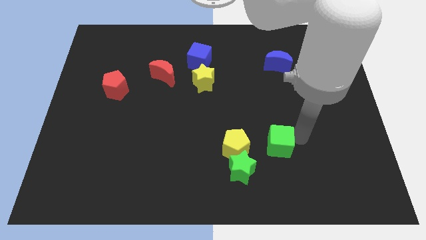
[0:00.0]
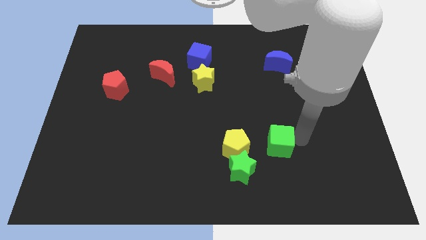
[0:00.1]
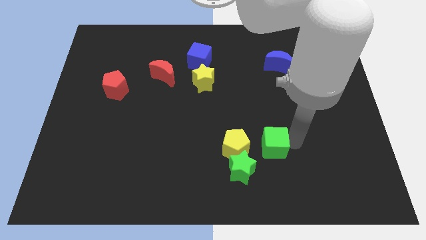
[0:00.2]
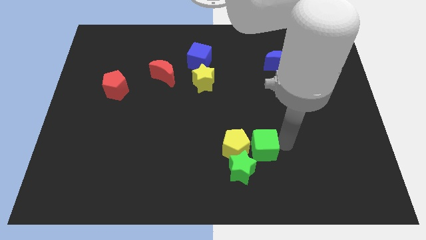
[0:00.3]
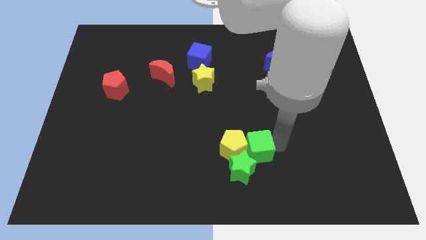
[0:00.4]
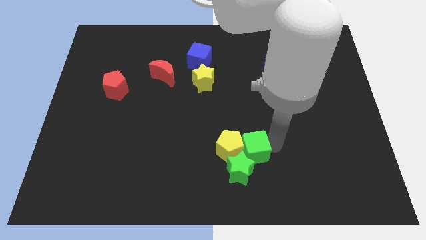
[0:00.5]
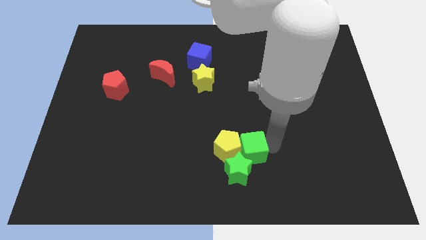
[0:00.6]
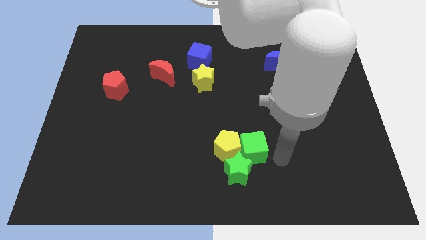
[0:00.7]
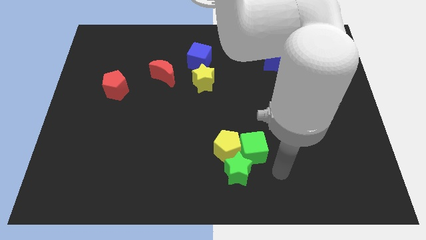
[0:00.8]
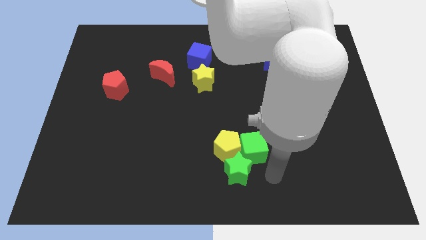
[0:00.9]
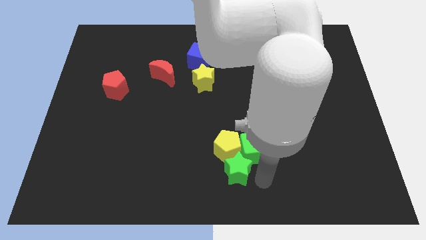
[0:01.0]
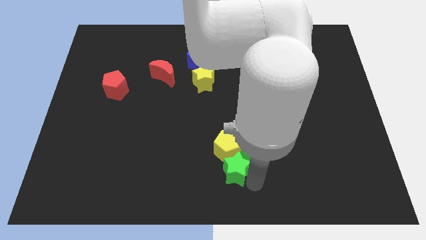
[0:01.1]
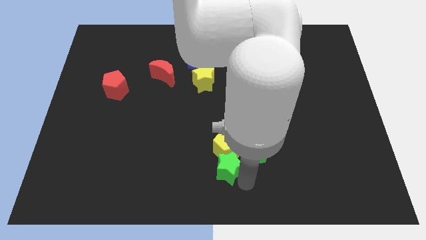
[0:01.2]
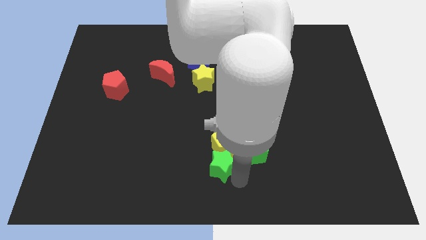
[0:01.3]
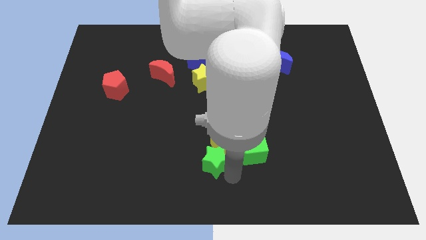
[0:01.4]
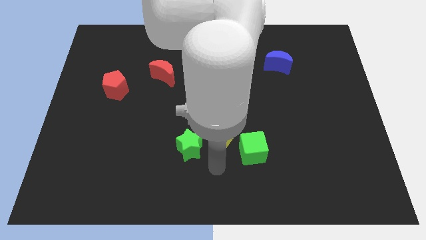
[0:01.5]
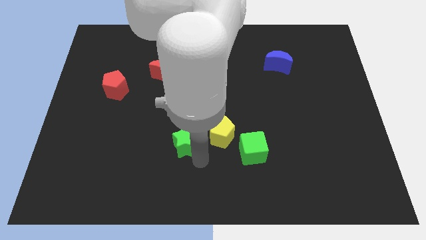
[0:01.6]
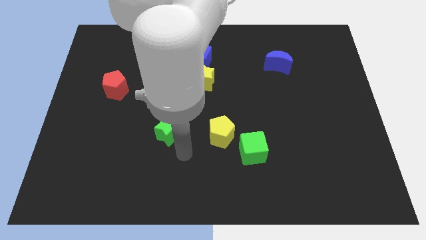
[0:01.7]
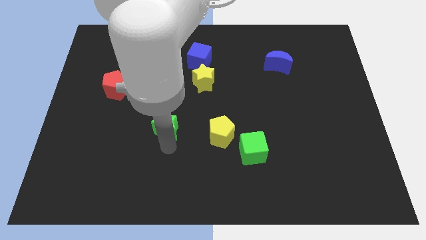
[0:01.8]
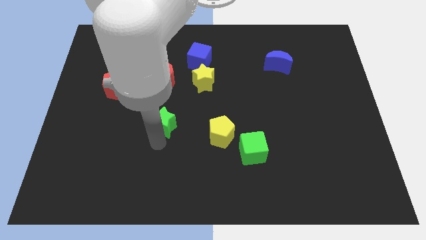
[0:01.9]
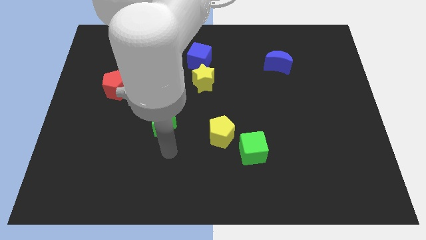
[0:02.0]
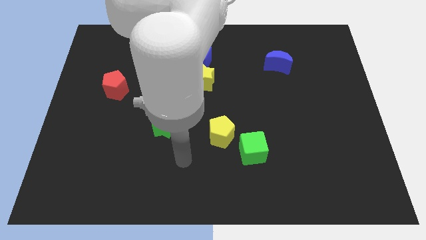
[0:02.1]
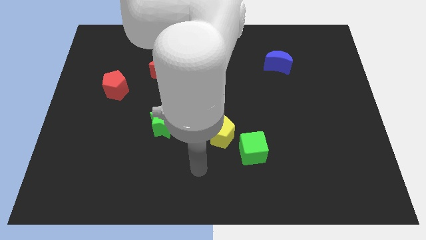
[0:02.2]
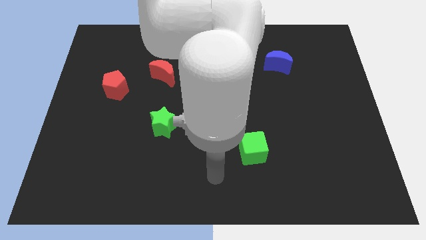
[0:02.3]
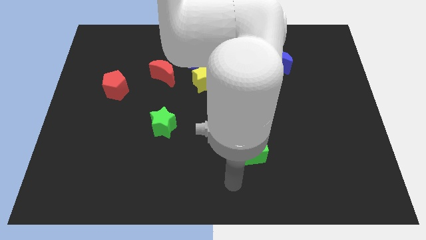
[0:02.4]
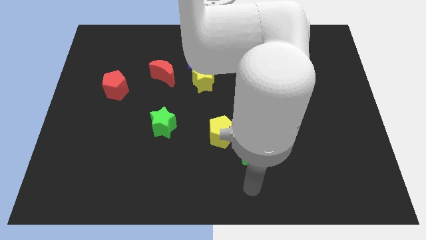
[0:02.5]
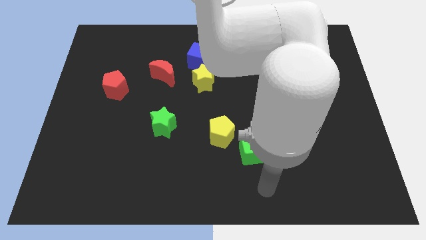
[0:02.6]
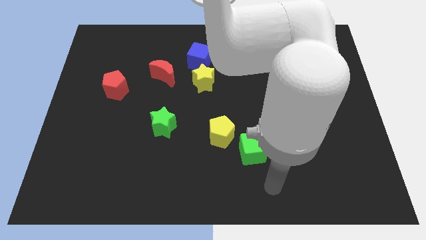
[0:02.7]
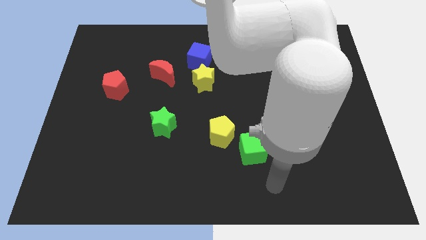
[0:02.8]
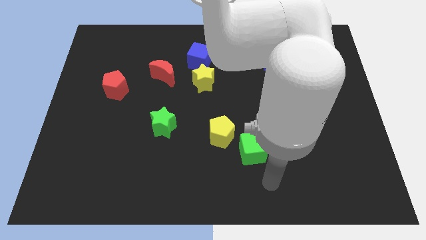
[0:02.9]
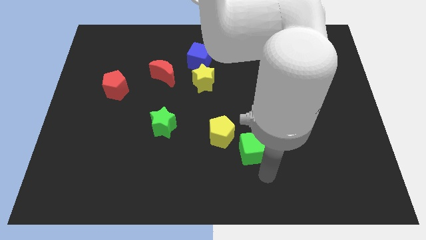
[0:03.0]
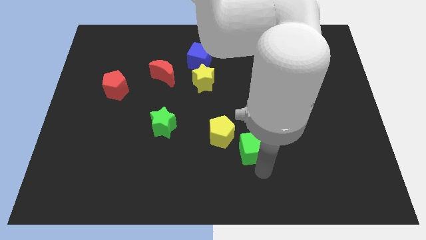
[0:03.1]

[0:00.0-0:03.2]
move the green star to the left of the yellow pentagon

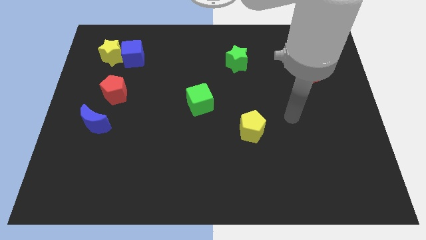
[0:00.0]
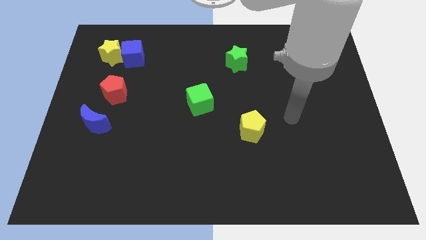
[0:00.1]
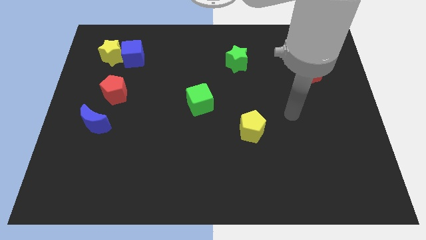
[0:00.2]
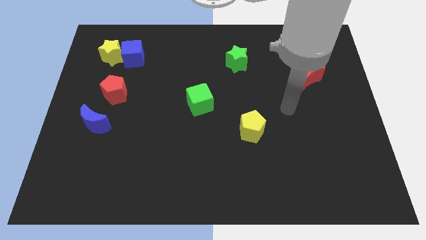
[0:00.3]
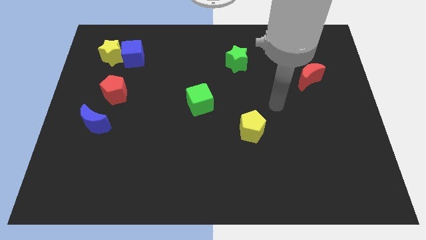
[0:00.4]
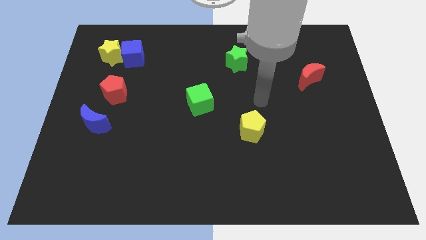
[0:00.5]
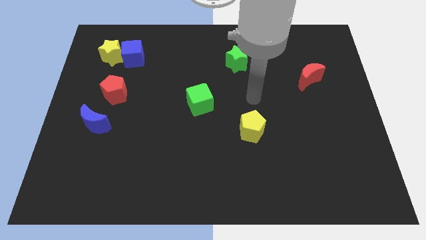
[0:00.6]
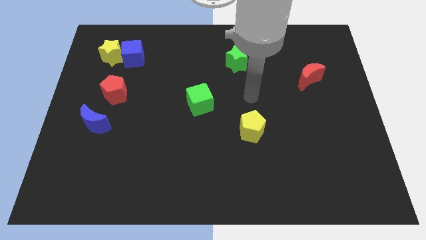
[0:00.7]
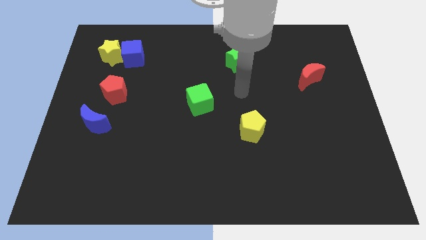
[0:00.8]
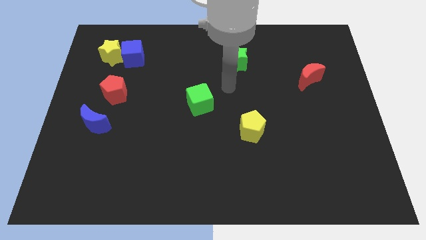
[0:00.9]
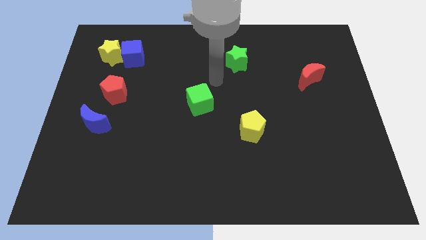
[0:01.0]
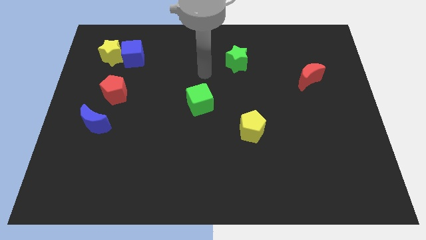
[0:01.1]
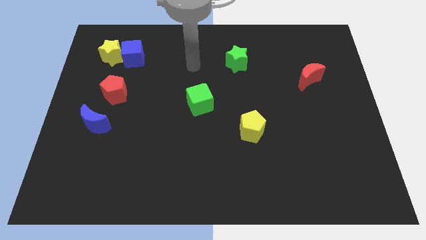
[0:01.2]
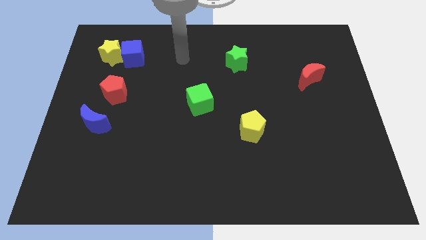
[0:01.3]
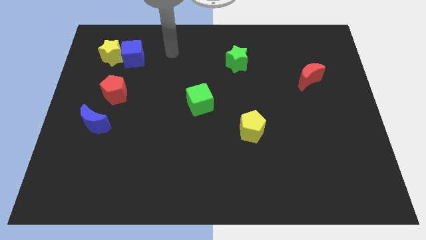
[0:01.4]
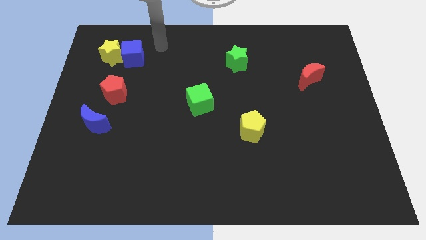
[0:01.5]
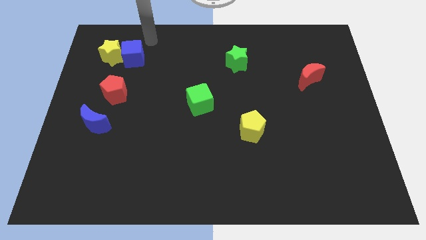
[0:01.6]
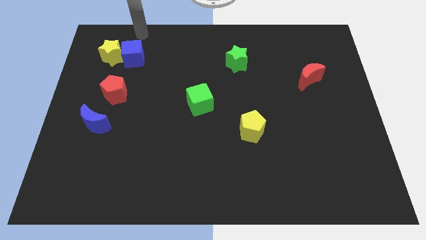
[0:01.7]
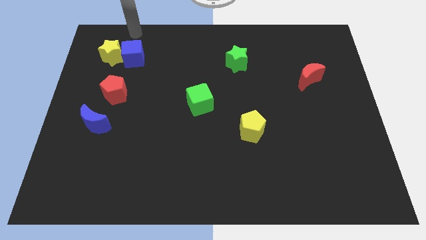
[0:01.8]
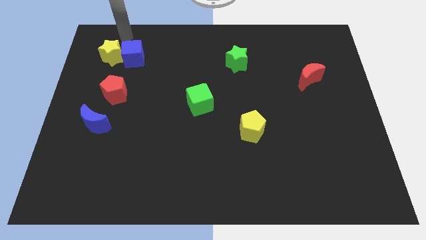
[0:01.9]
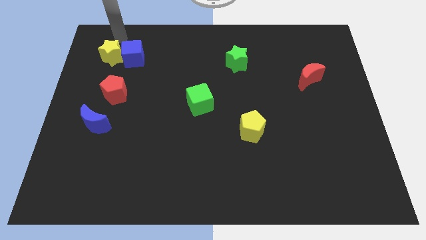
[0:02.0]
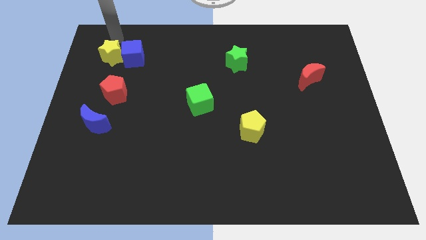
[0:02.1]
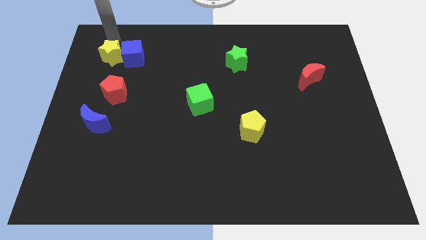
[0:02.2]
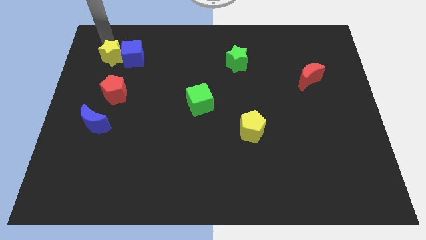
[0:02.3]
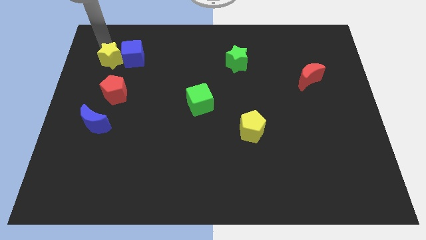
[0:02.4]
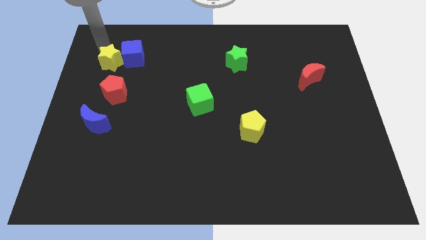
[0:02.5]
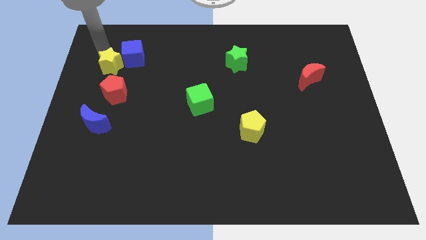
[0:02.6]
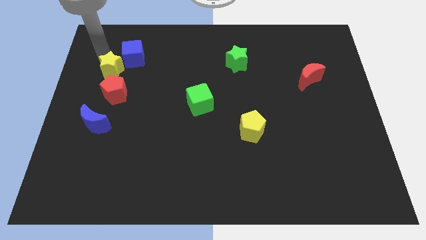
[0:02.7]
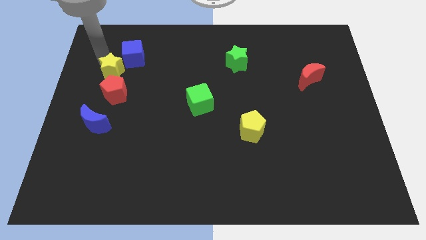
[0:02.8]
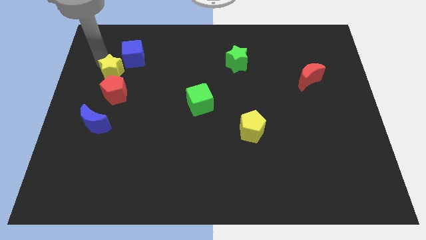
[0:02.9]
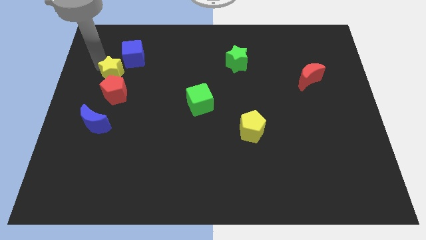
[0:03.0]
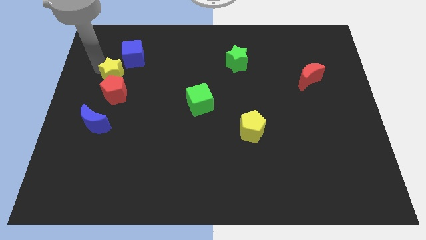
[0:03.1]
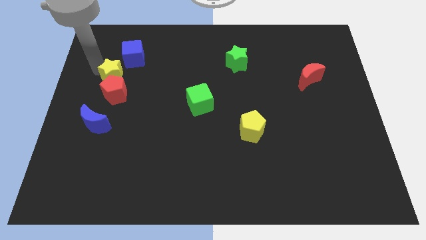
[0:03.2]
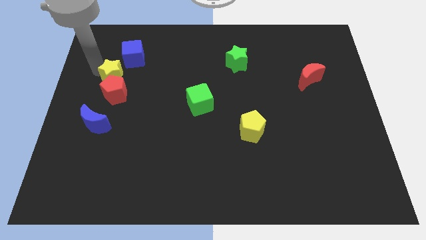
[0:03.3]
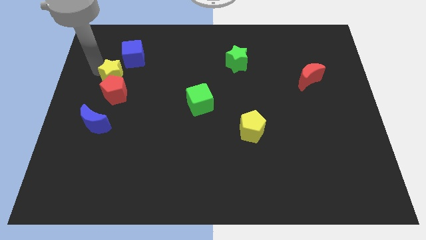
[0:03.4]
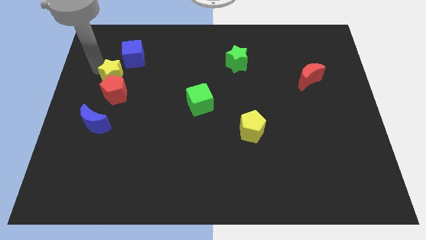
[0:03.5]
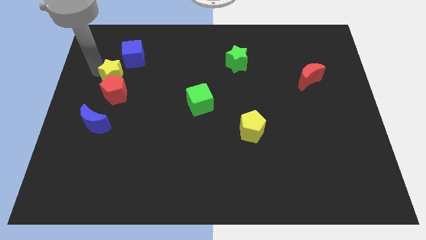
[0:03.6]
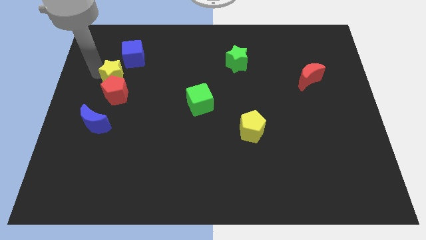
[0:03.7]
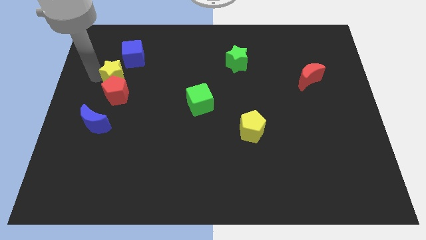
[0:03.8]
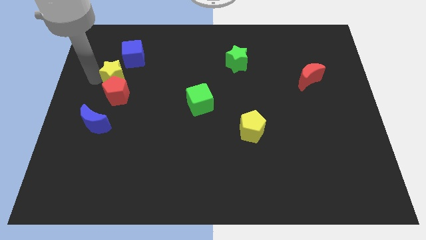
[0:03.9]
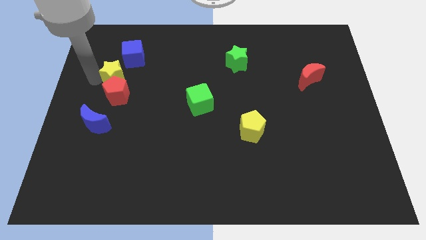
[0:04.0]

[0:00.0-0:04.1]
push the yellow star into red pentagon

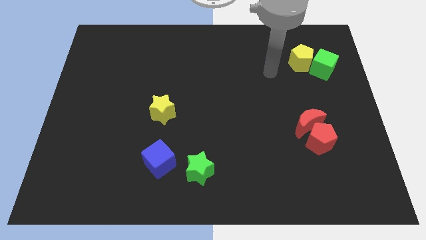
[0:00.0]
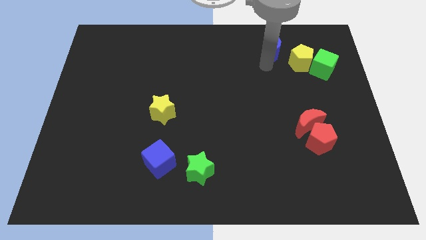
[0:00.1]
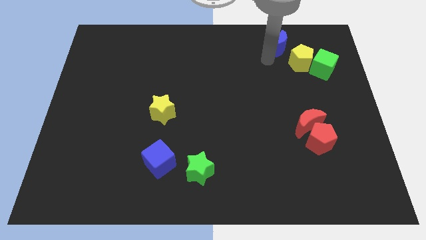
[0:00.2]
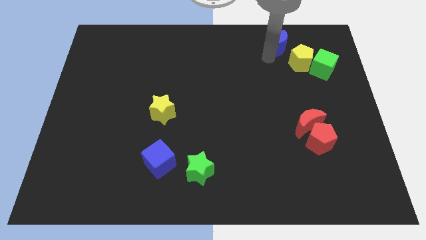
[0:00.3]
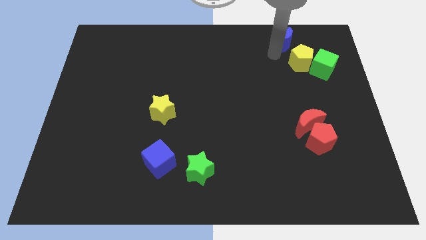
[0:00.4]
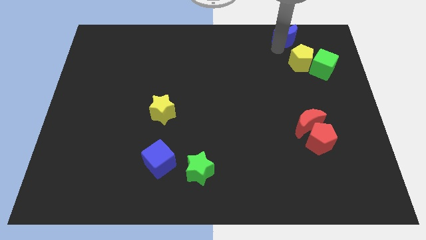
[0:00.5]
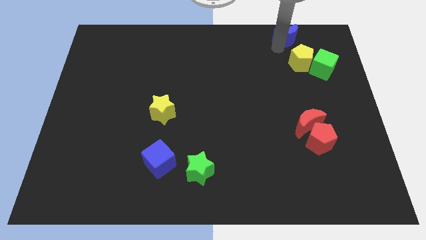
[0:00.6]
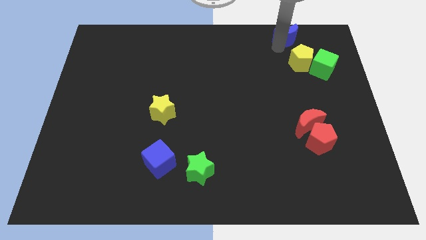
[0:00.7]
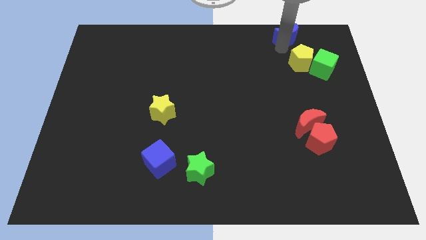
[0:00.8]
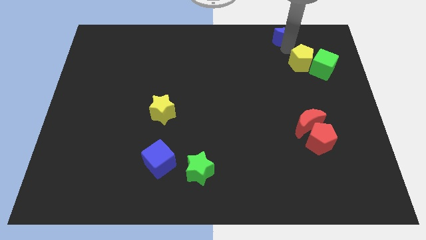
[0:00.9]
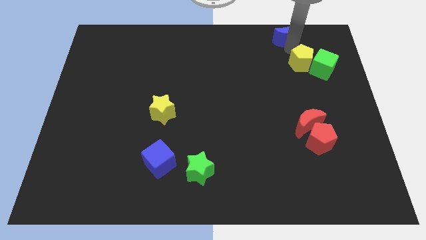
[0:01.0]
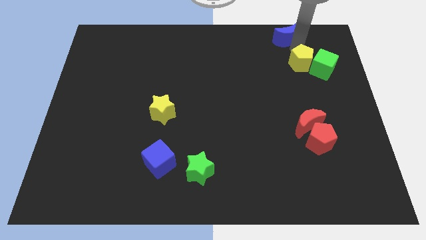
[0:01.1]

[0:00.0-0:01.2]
push the blue crescent towards the top of the board

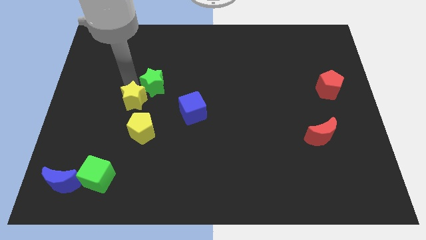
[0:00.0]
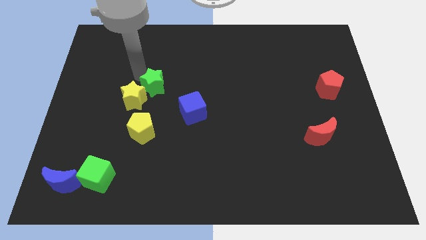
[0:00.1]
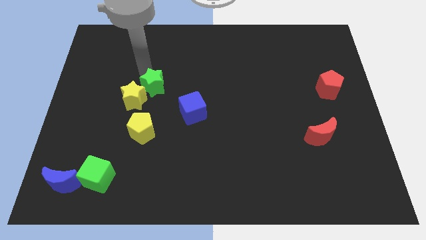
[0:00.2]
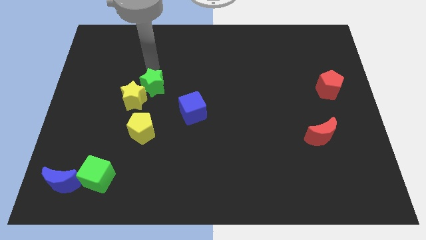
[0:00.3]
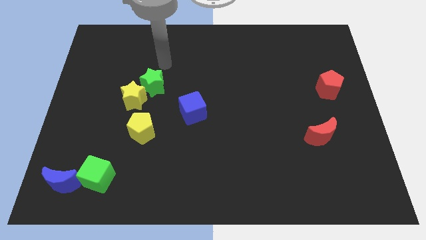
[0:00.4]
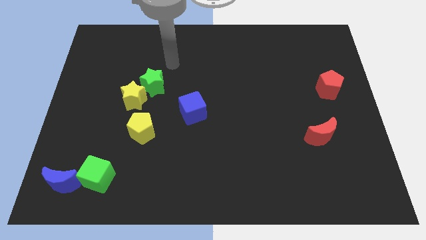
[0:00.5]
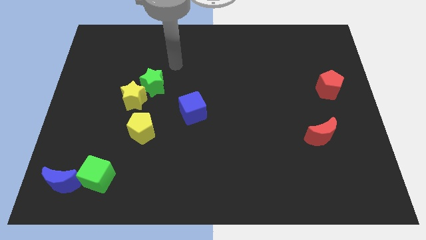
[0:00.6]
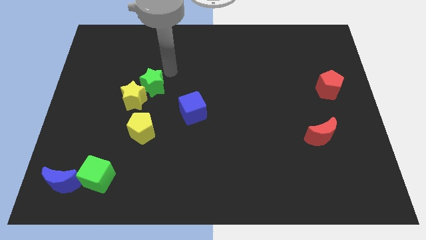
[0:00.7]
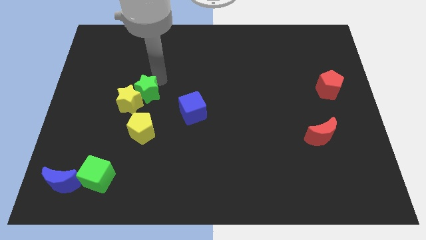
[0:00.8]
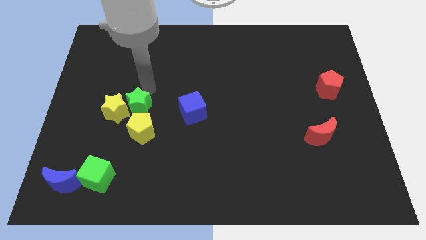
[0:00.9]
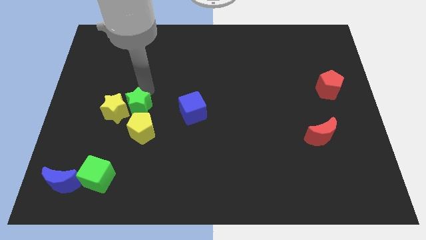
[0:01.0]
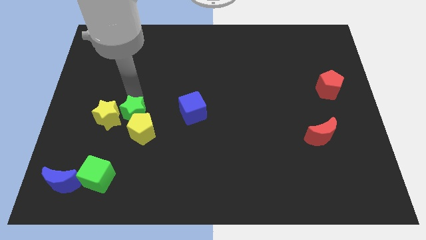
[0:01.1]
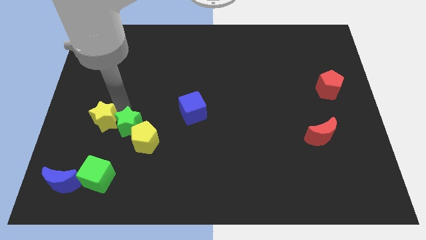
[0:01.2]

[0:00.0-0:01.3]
place the green star parallel right to the yellow star
